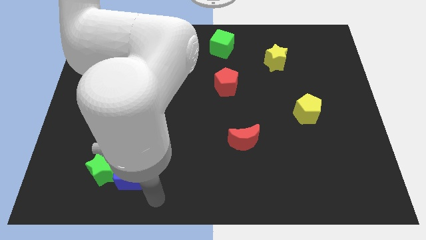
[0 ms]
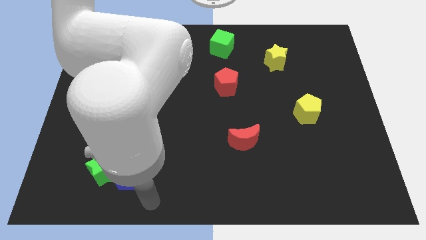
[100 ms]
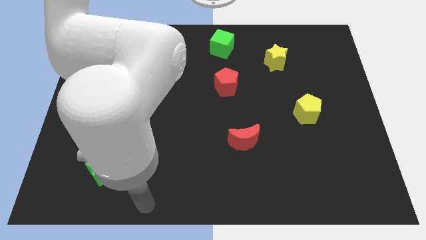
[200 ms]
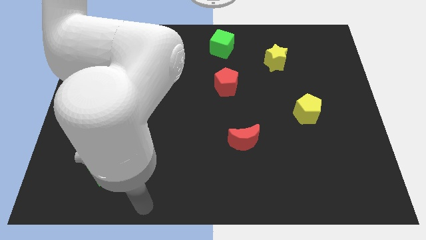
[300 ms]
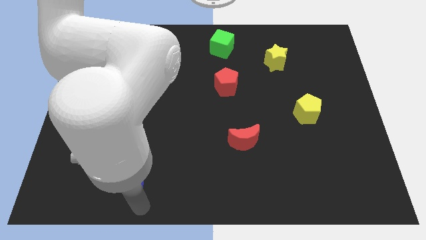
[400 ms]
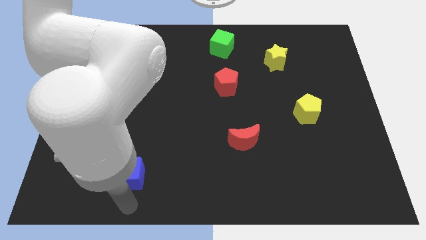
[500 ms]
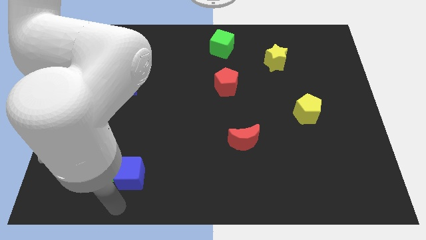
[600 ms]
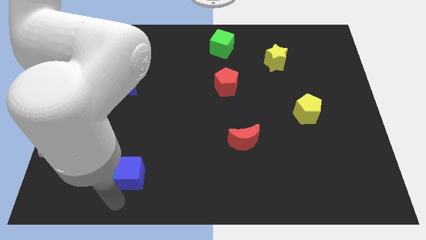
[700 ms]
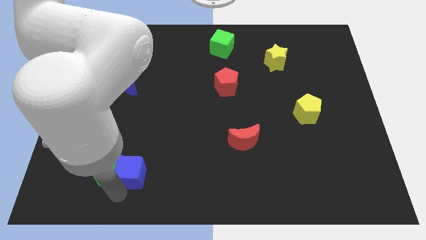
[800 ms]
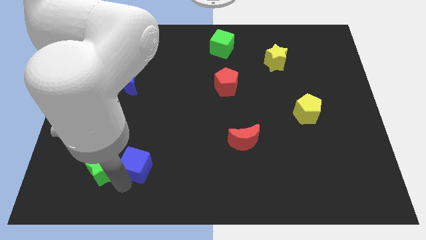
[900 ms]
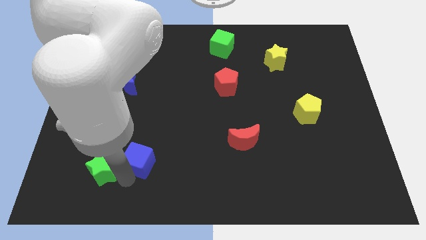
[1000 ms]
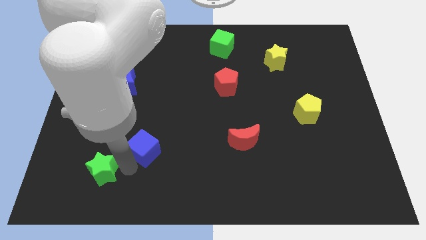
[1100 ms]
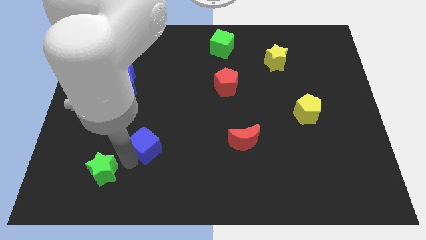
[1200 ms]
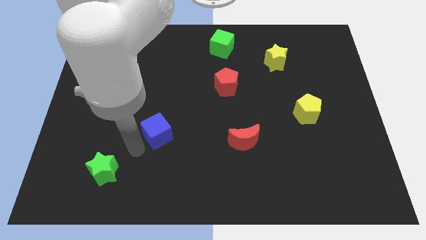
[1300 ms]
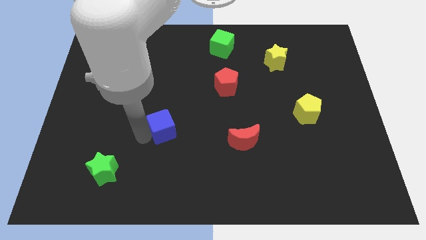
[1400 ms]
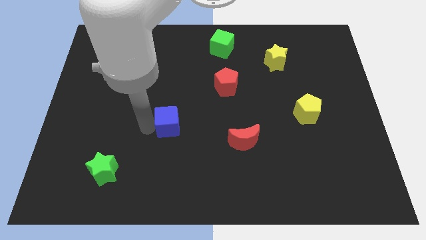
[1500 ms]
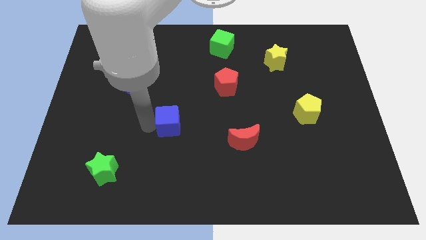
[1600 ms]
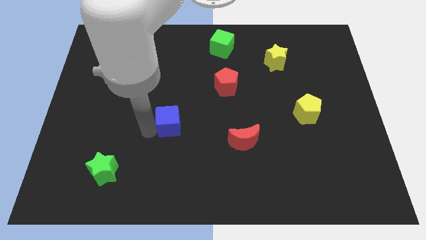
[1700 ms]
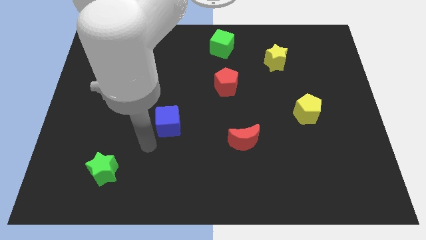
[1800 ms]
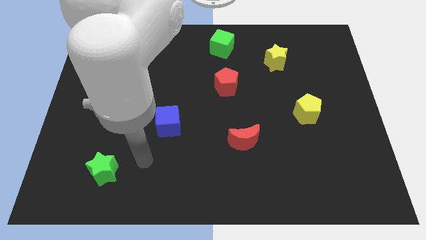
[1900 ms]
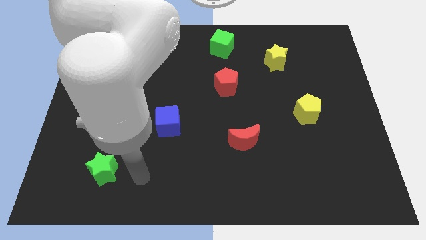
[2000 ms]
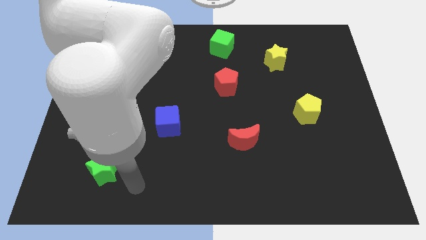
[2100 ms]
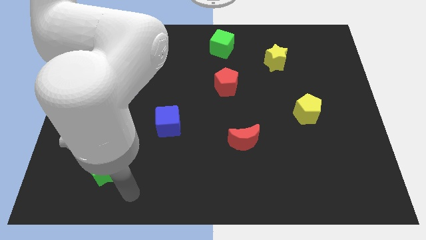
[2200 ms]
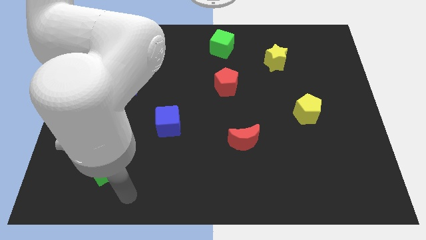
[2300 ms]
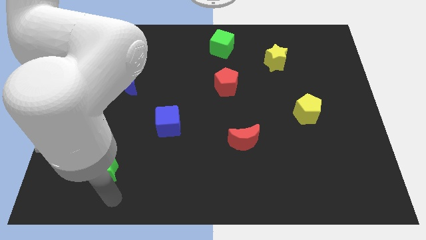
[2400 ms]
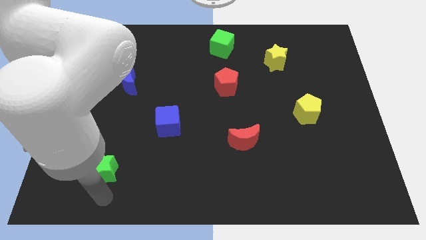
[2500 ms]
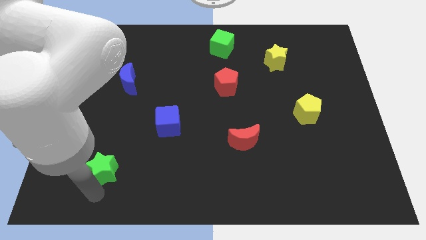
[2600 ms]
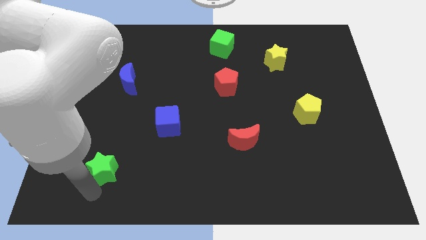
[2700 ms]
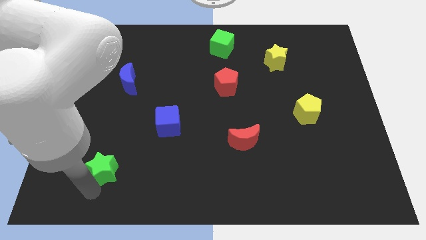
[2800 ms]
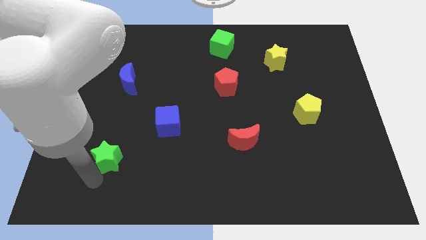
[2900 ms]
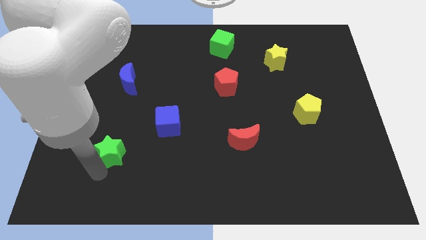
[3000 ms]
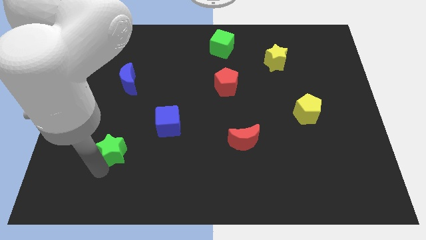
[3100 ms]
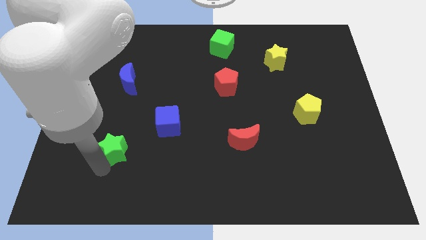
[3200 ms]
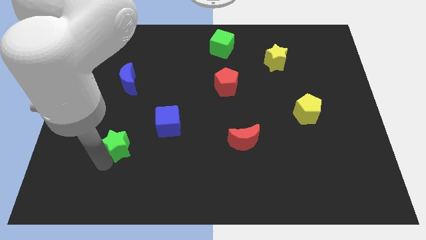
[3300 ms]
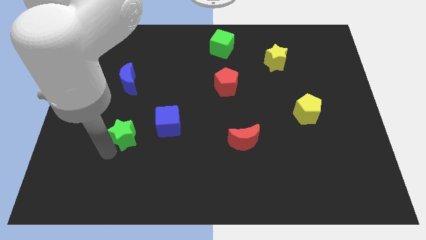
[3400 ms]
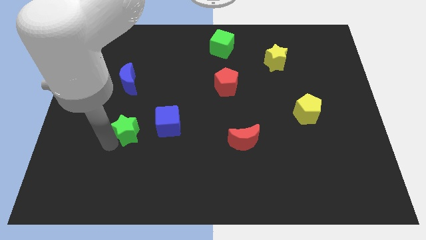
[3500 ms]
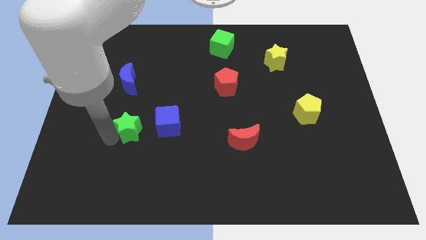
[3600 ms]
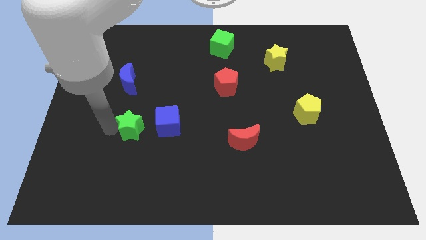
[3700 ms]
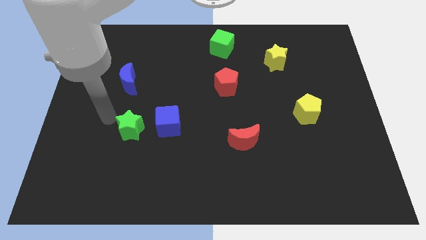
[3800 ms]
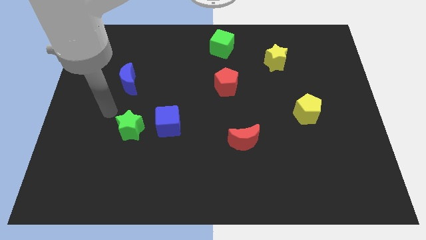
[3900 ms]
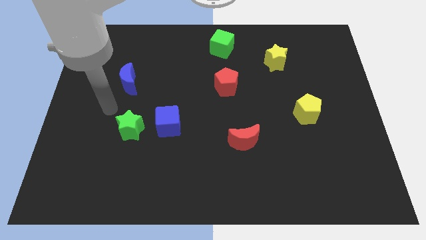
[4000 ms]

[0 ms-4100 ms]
move green star and blue cube upwards

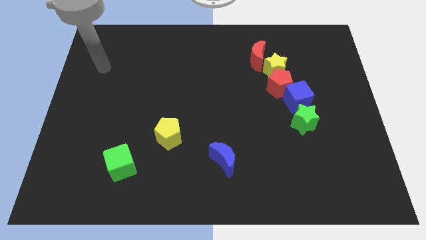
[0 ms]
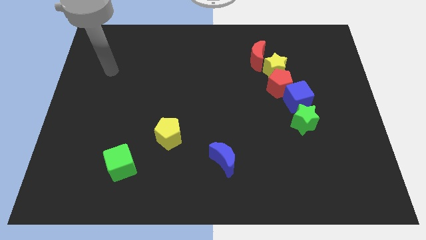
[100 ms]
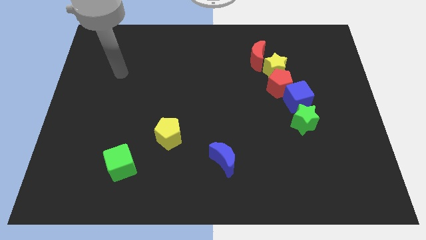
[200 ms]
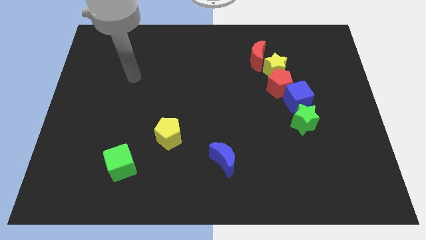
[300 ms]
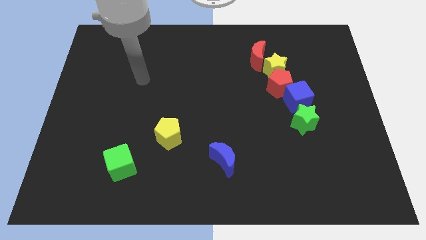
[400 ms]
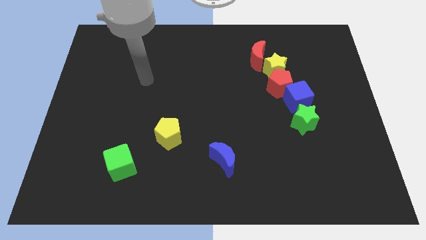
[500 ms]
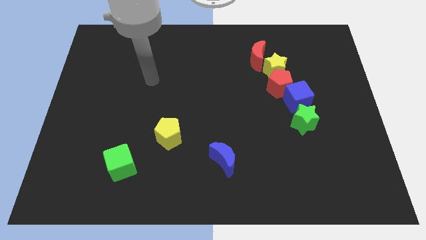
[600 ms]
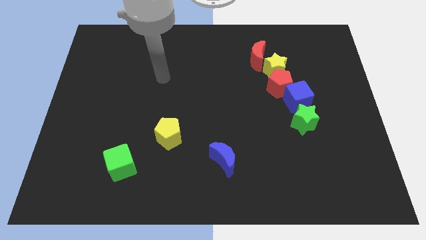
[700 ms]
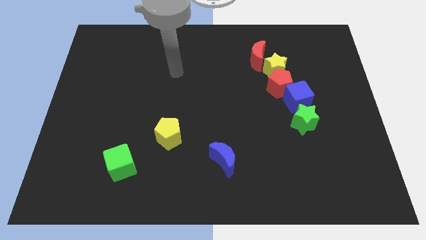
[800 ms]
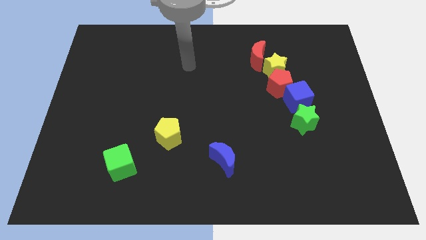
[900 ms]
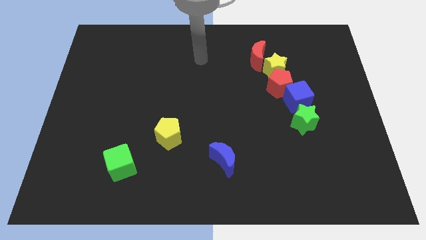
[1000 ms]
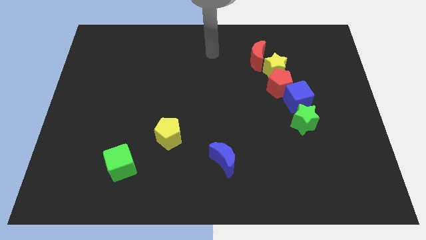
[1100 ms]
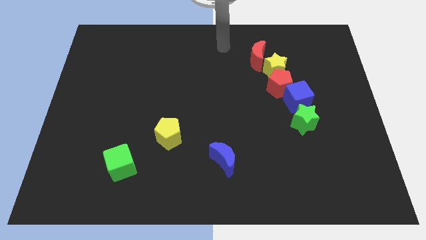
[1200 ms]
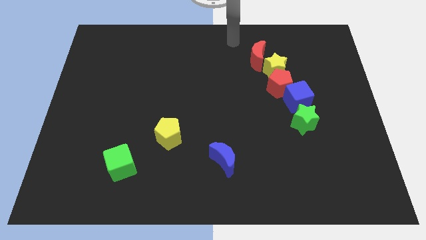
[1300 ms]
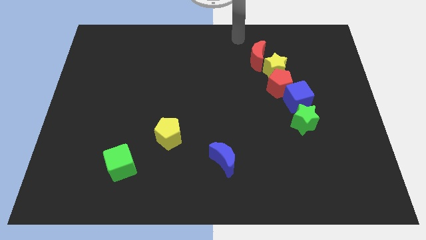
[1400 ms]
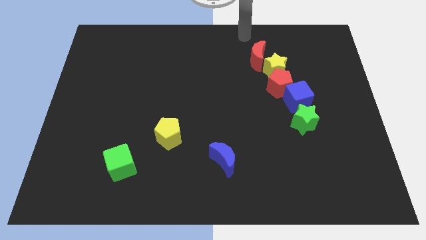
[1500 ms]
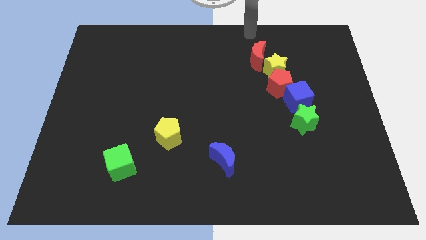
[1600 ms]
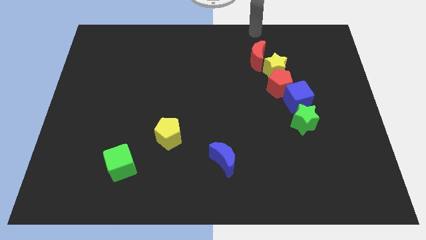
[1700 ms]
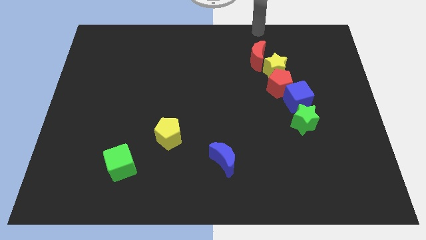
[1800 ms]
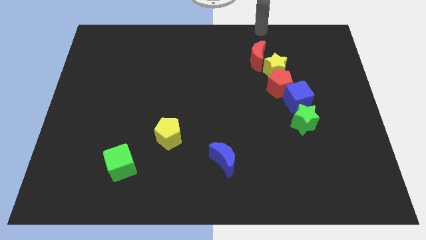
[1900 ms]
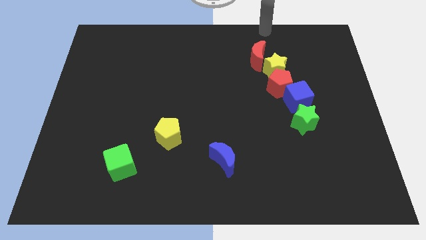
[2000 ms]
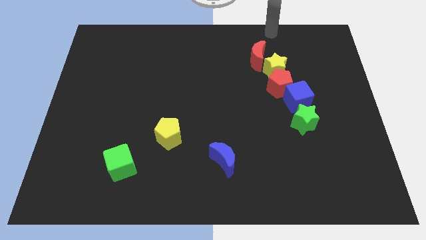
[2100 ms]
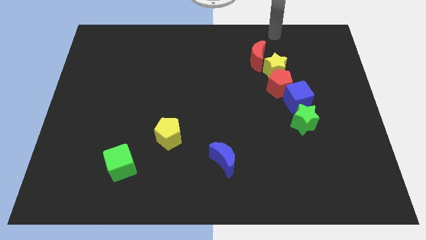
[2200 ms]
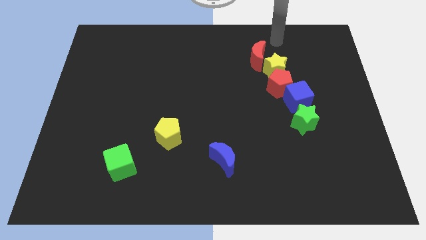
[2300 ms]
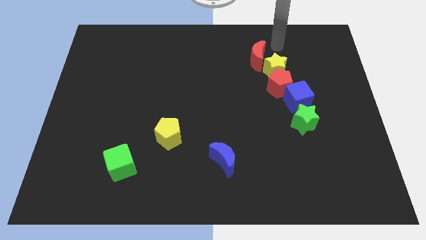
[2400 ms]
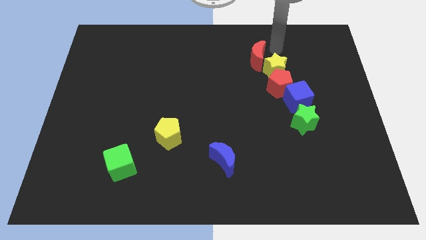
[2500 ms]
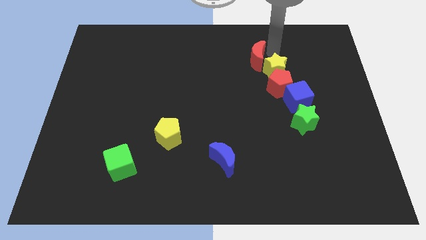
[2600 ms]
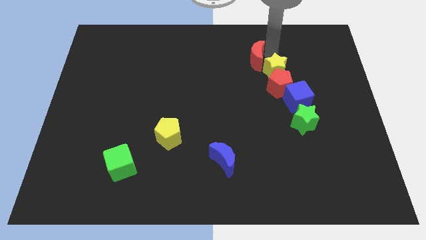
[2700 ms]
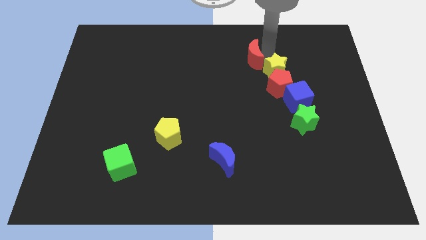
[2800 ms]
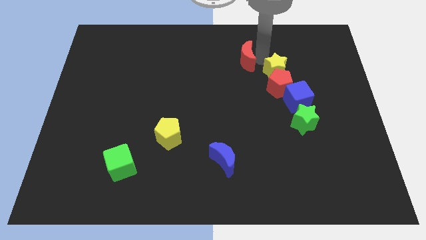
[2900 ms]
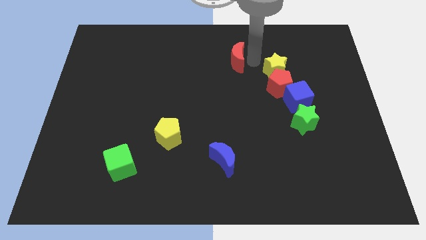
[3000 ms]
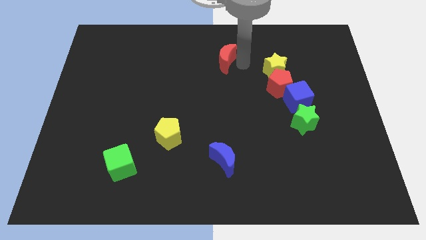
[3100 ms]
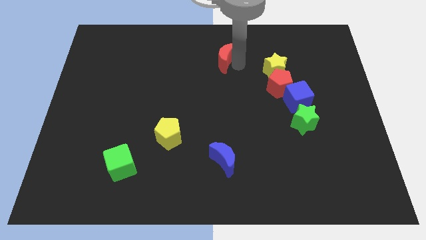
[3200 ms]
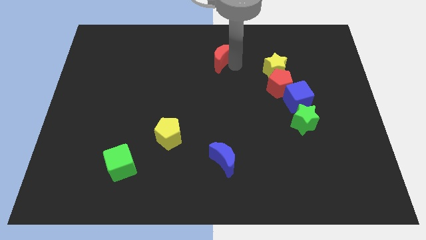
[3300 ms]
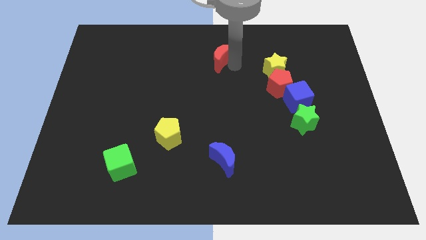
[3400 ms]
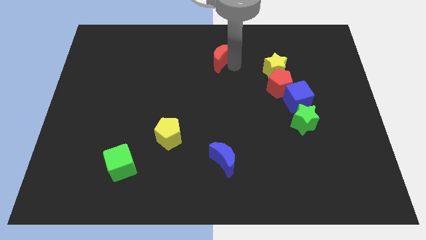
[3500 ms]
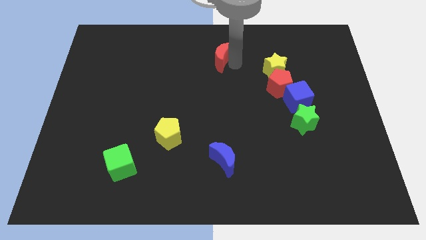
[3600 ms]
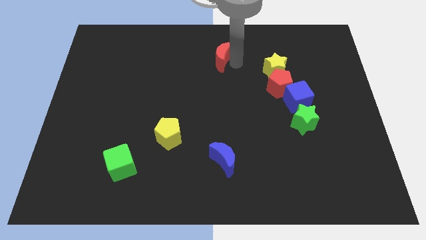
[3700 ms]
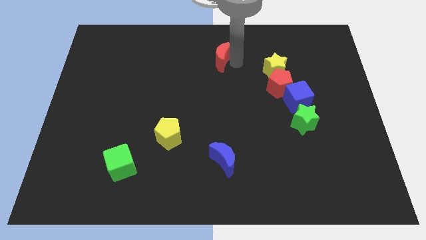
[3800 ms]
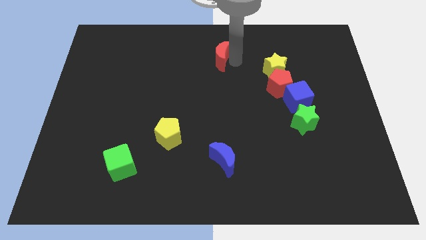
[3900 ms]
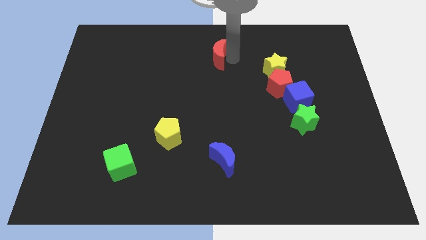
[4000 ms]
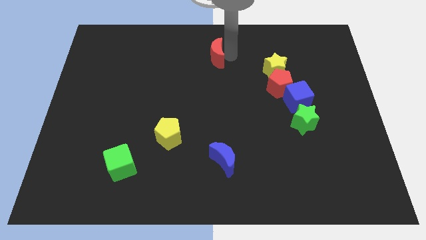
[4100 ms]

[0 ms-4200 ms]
place the red moon above the blue moon

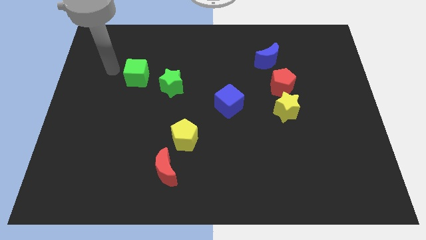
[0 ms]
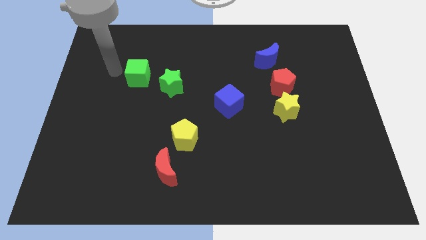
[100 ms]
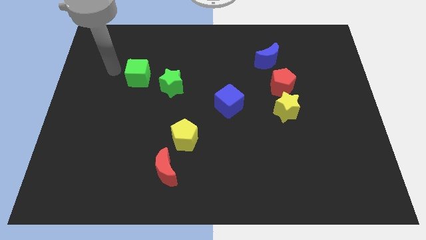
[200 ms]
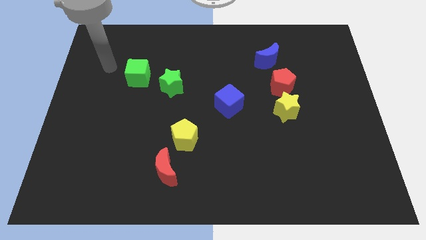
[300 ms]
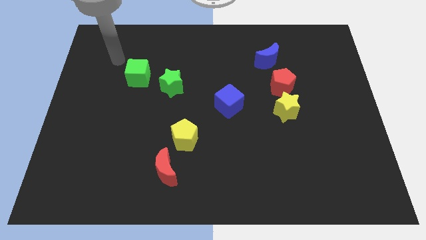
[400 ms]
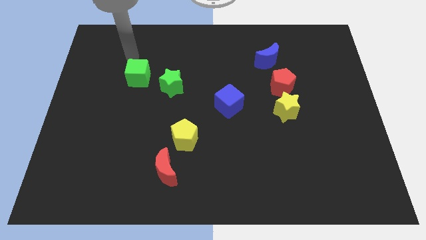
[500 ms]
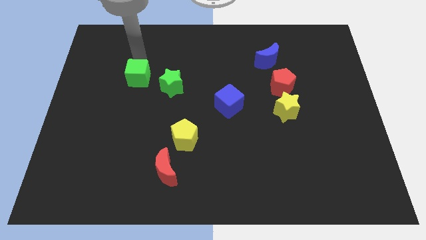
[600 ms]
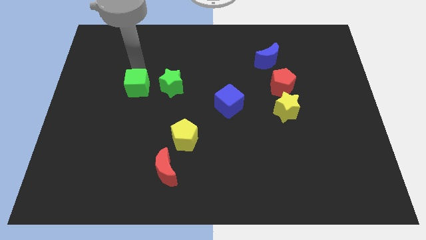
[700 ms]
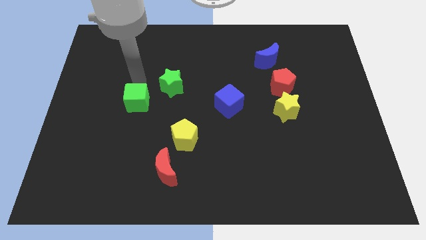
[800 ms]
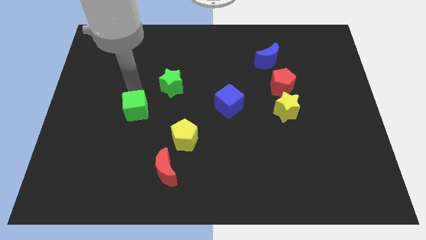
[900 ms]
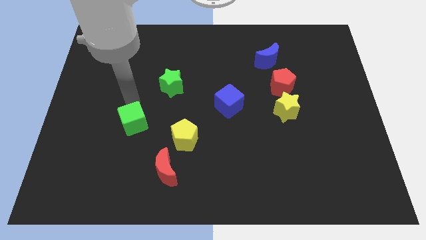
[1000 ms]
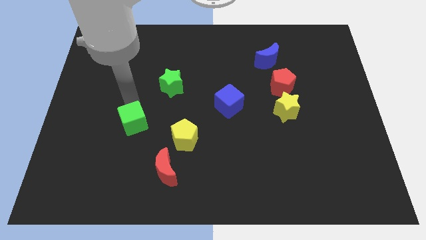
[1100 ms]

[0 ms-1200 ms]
slightly push the green cube towards the bottom of the board
